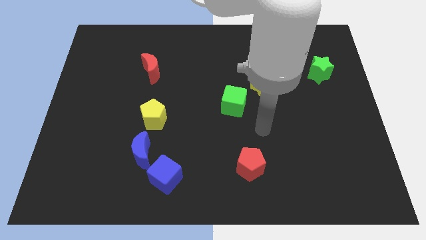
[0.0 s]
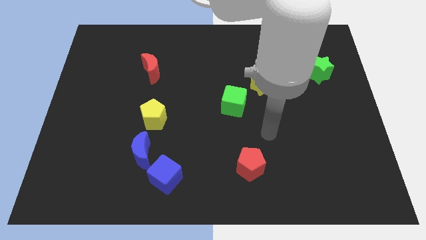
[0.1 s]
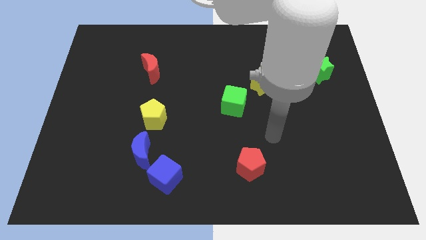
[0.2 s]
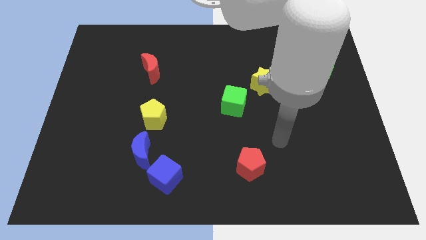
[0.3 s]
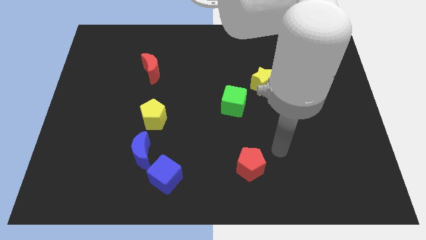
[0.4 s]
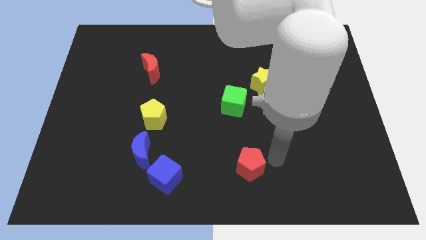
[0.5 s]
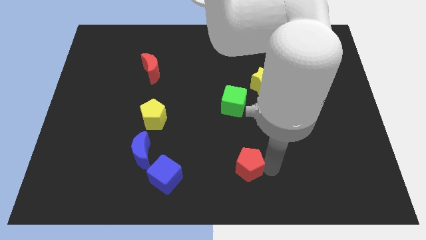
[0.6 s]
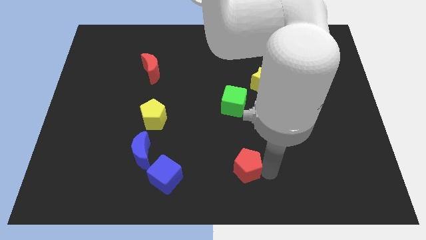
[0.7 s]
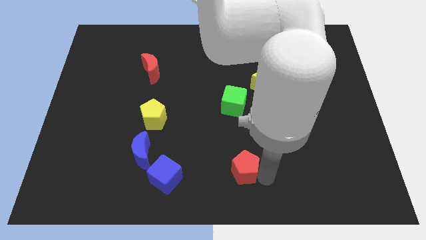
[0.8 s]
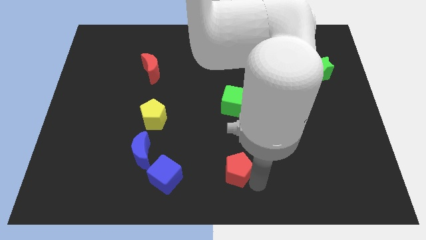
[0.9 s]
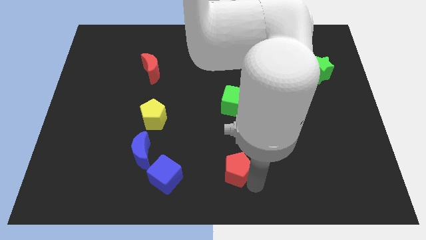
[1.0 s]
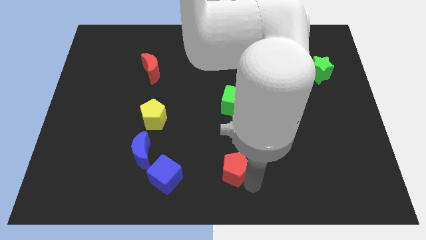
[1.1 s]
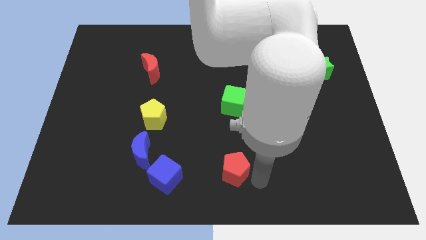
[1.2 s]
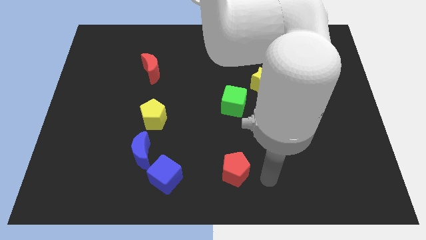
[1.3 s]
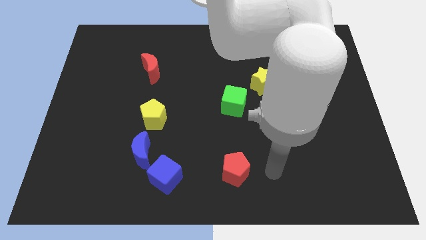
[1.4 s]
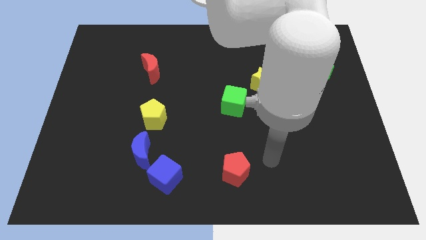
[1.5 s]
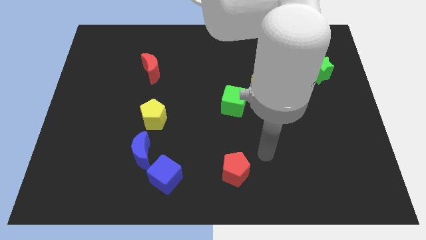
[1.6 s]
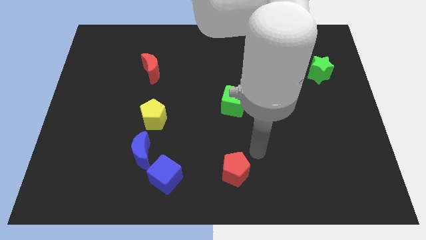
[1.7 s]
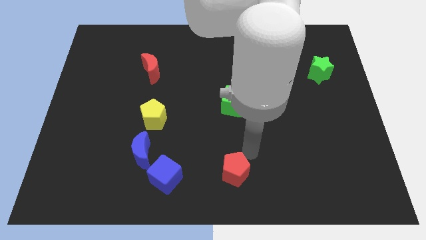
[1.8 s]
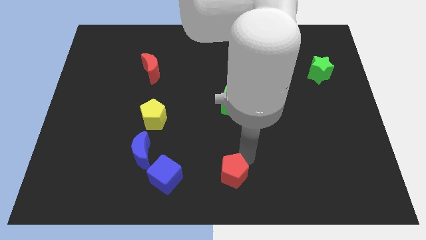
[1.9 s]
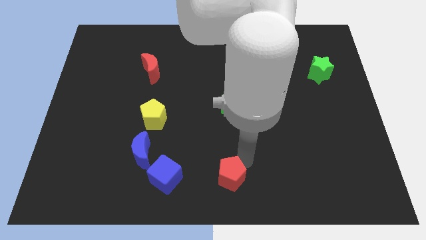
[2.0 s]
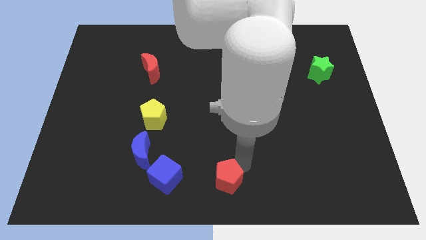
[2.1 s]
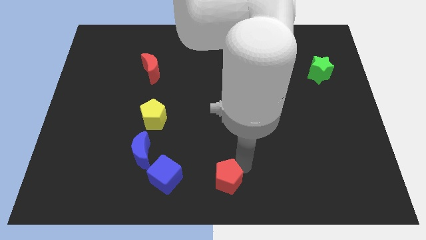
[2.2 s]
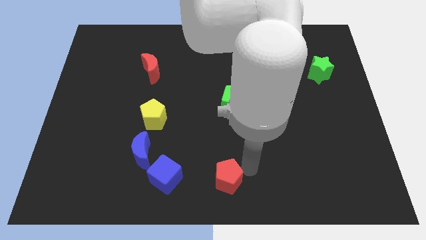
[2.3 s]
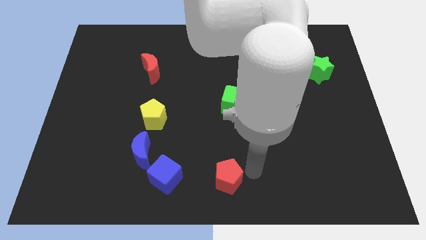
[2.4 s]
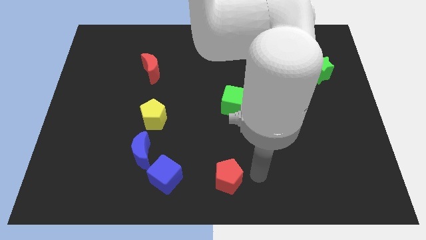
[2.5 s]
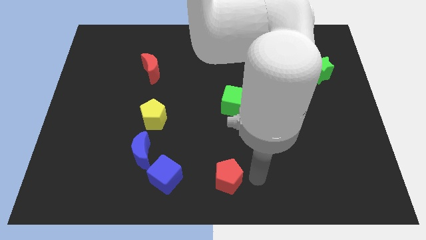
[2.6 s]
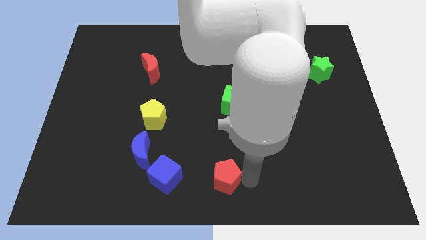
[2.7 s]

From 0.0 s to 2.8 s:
place the red pentagon right to the blue cube

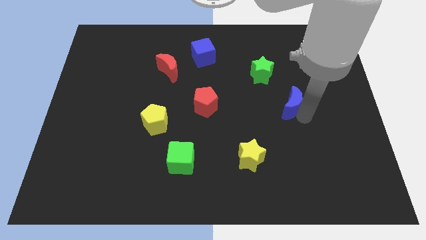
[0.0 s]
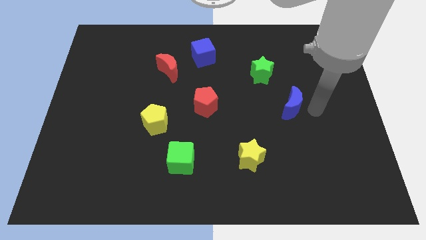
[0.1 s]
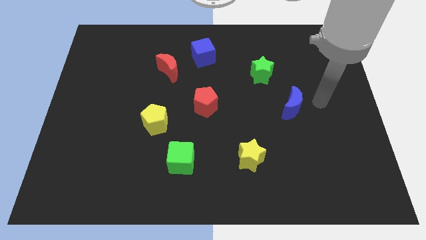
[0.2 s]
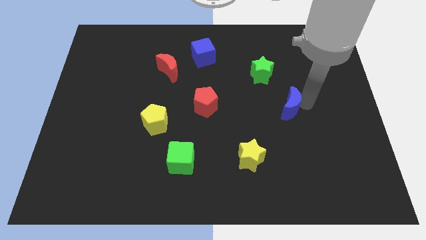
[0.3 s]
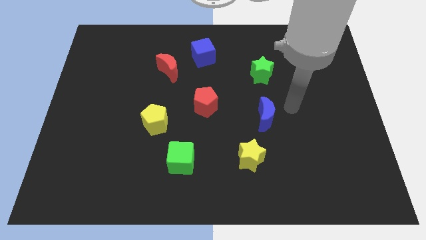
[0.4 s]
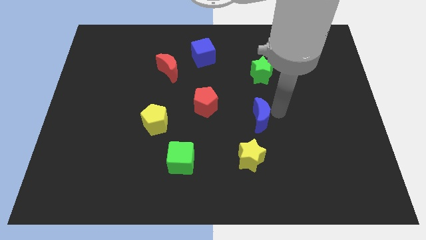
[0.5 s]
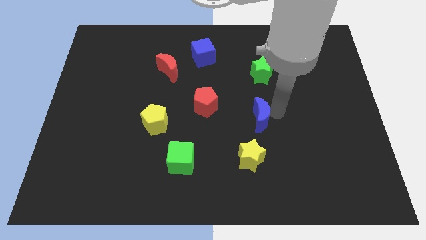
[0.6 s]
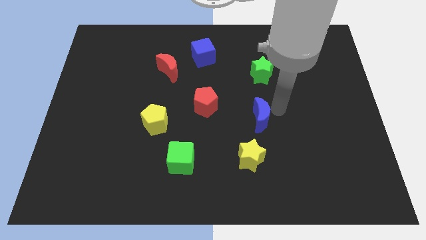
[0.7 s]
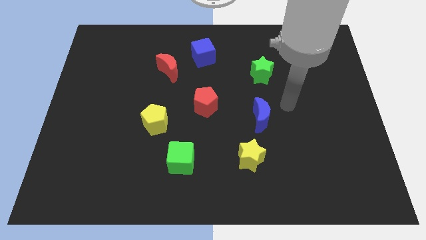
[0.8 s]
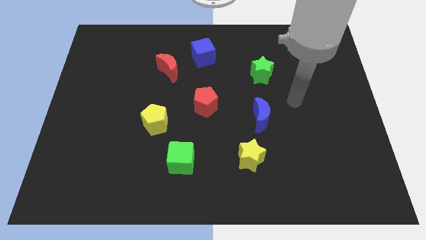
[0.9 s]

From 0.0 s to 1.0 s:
place the blue crescent above the yellow star

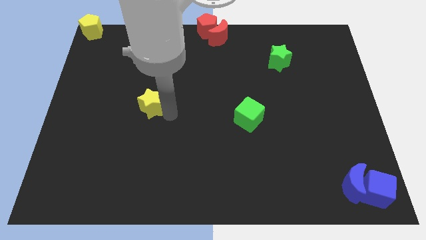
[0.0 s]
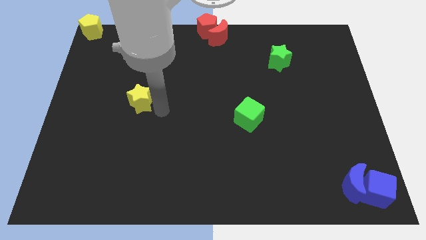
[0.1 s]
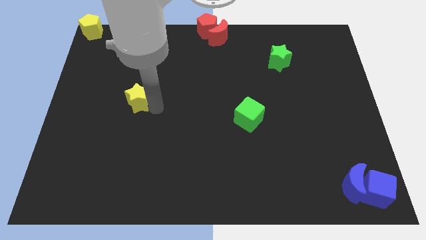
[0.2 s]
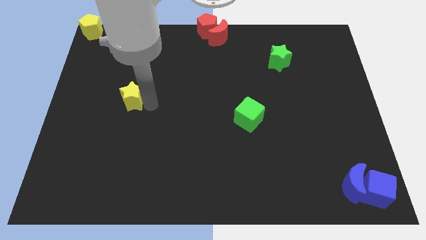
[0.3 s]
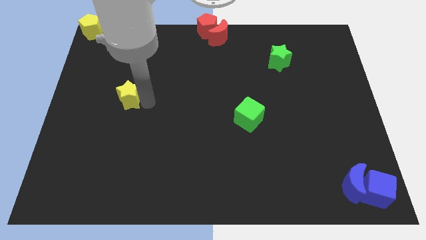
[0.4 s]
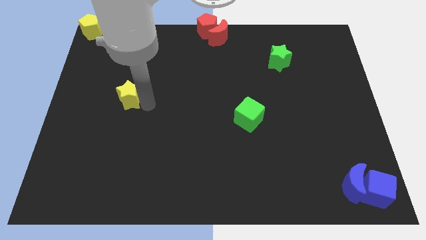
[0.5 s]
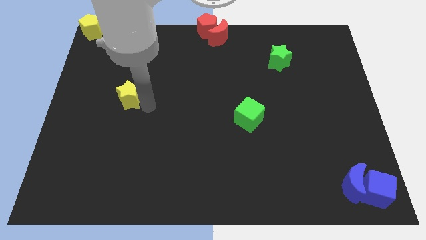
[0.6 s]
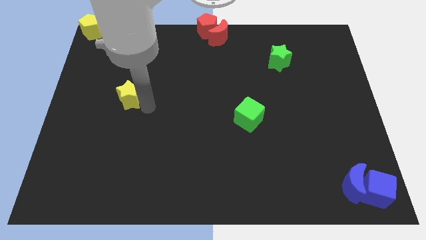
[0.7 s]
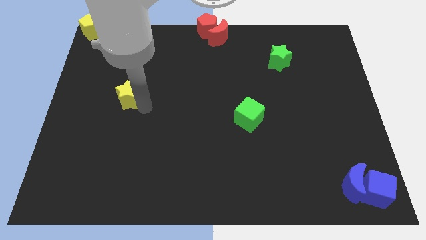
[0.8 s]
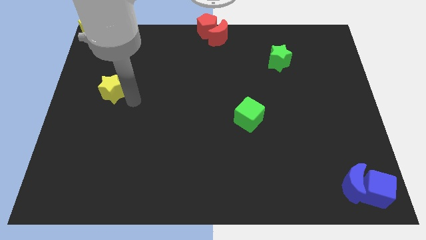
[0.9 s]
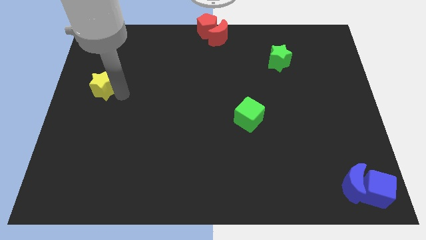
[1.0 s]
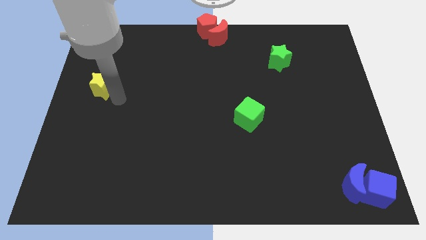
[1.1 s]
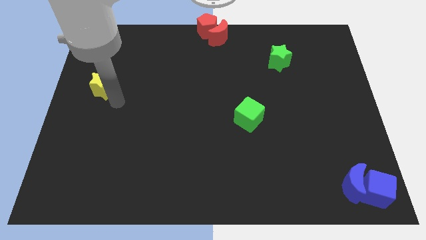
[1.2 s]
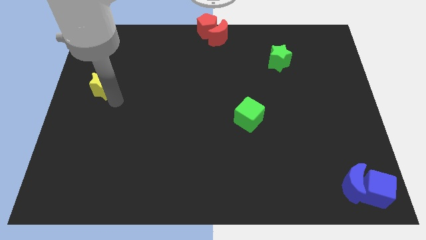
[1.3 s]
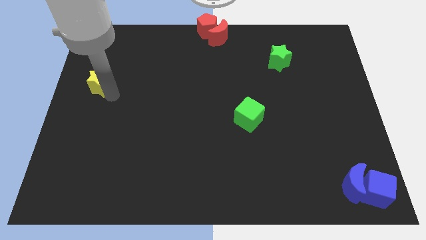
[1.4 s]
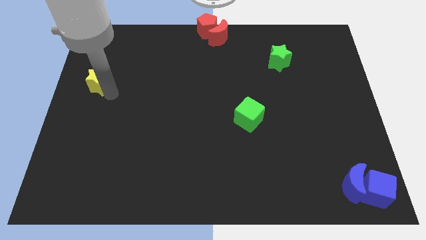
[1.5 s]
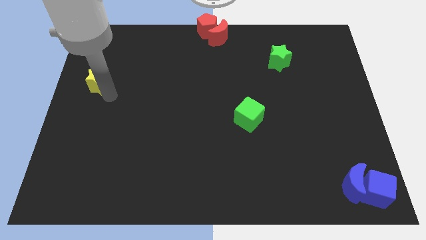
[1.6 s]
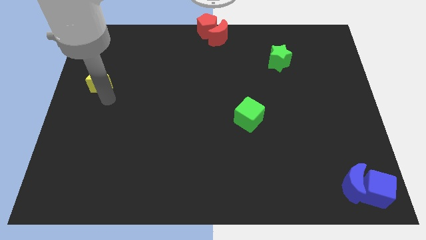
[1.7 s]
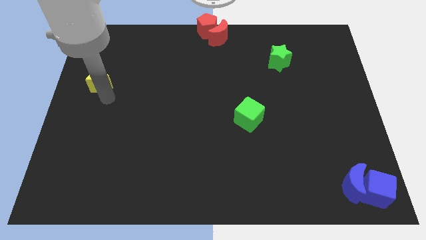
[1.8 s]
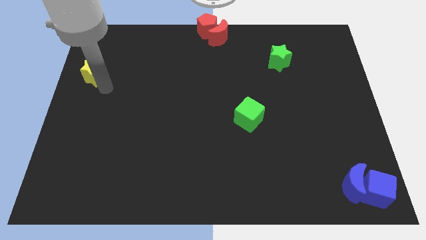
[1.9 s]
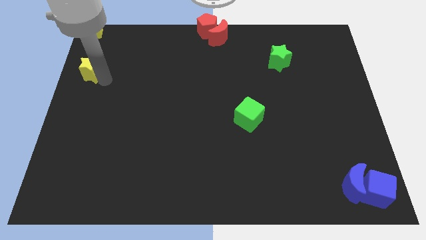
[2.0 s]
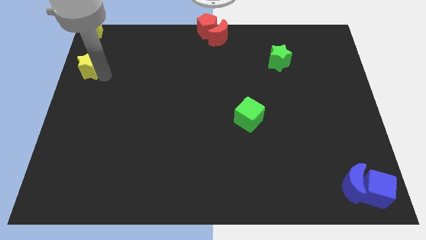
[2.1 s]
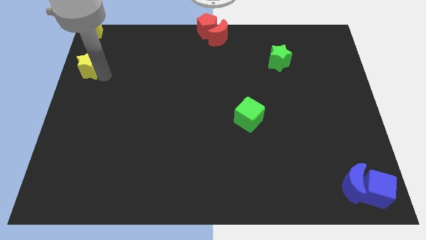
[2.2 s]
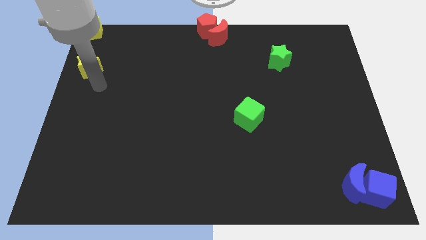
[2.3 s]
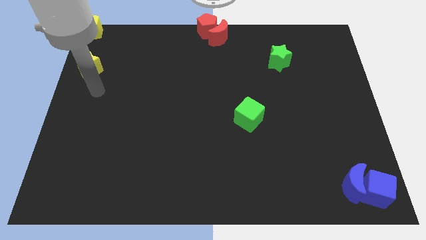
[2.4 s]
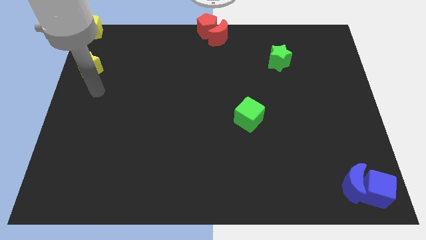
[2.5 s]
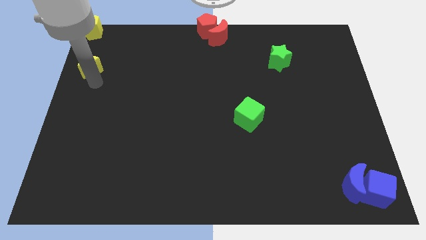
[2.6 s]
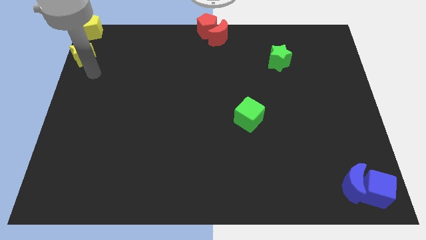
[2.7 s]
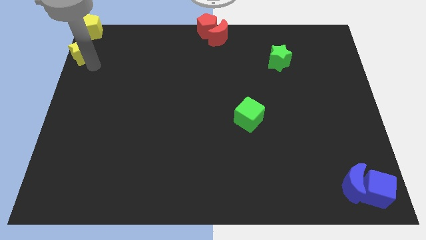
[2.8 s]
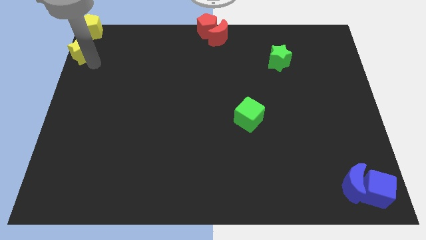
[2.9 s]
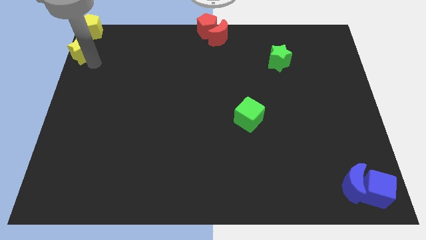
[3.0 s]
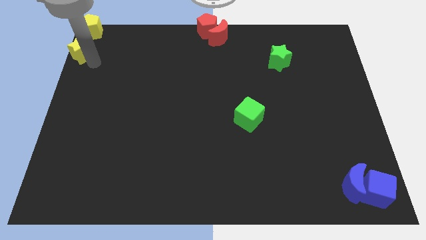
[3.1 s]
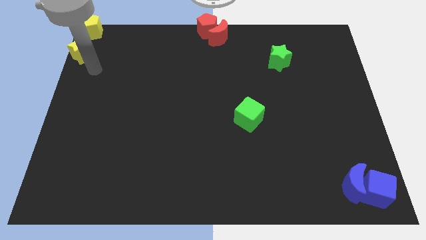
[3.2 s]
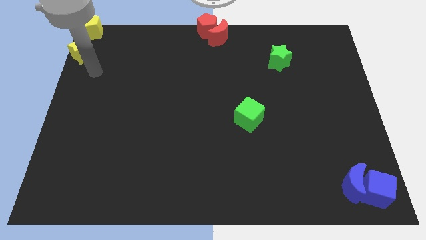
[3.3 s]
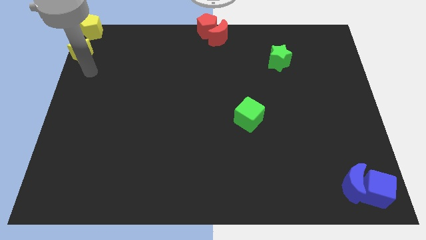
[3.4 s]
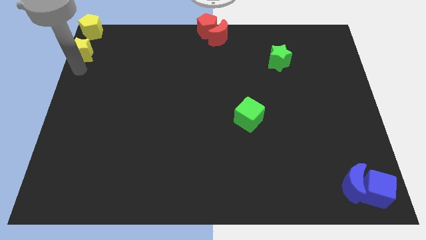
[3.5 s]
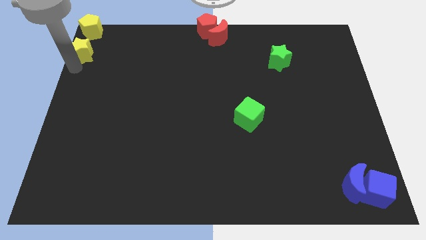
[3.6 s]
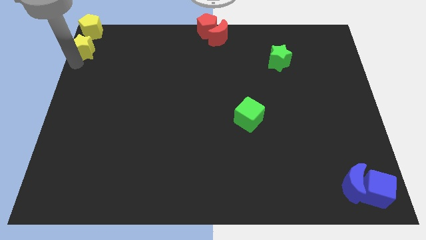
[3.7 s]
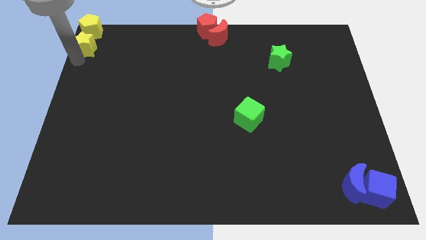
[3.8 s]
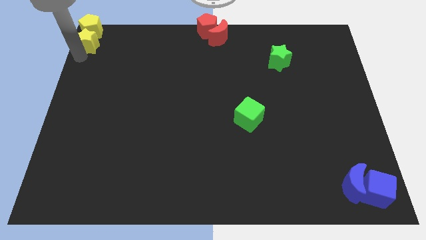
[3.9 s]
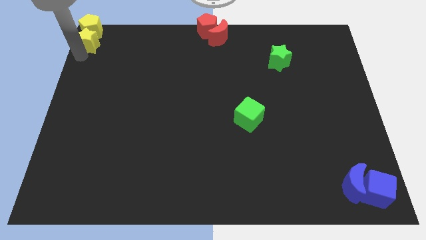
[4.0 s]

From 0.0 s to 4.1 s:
move the yellow star close to the bottom side of the yellow pentagon

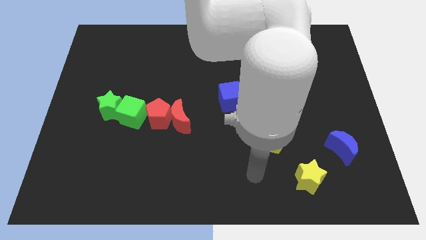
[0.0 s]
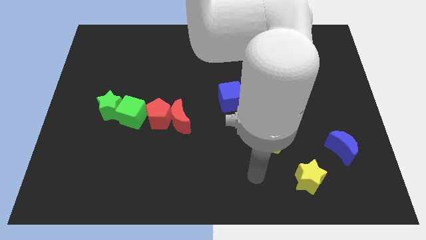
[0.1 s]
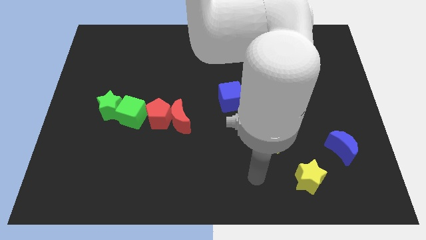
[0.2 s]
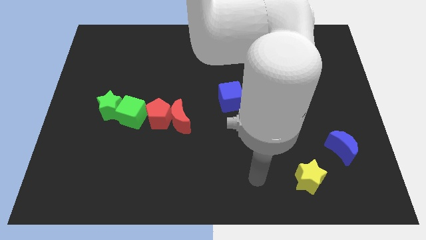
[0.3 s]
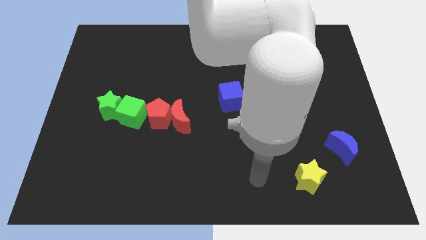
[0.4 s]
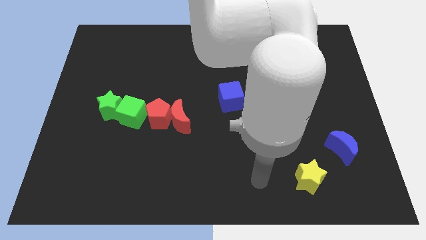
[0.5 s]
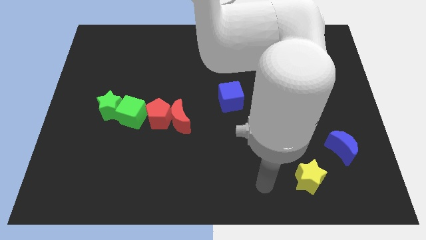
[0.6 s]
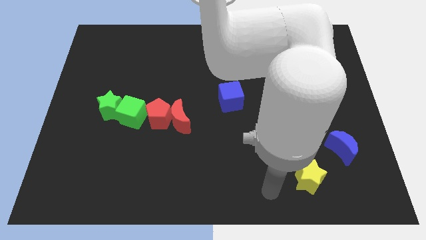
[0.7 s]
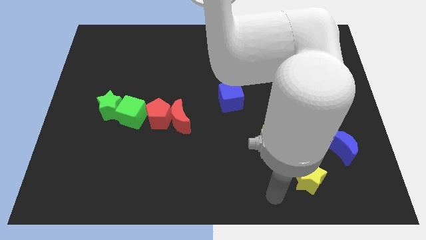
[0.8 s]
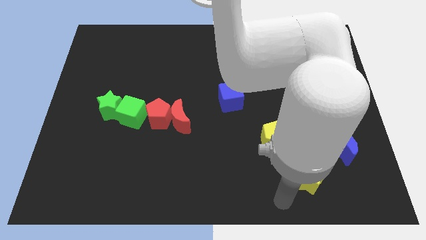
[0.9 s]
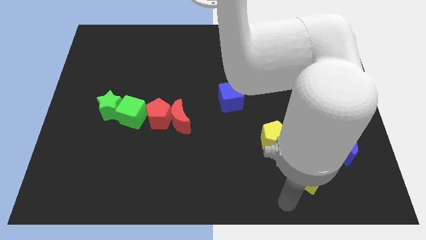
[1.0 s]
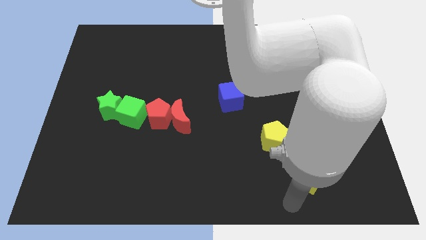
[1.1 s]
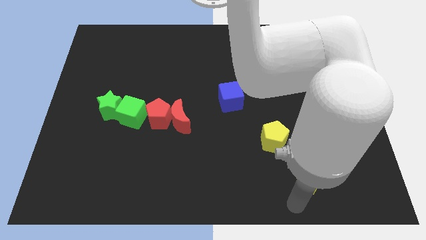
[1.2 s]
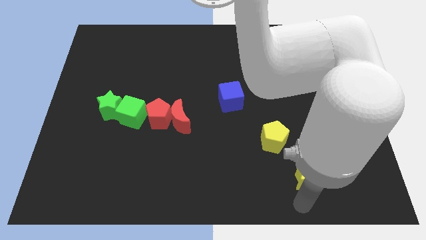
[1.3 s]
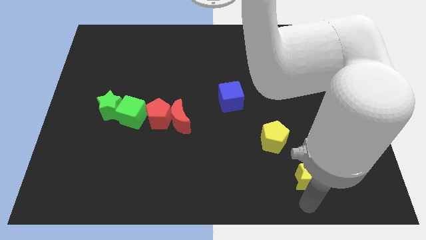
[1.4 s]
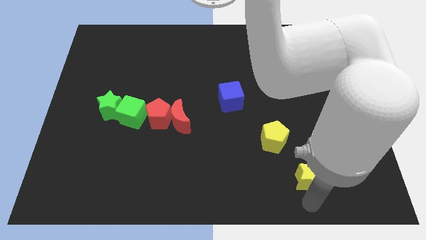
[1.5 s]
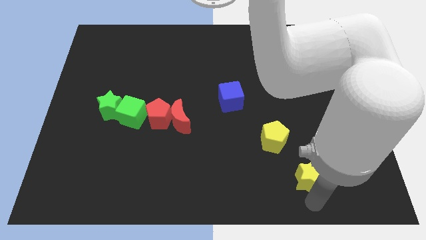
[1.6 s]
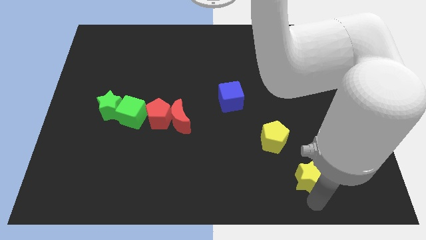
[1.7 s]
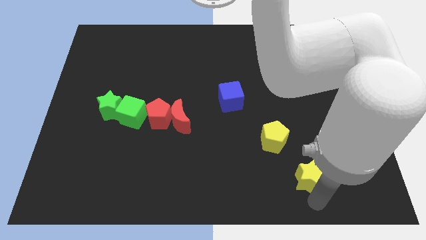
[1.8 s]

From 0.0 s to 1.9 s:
point your arm below the yellow star
